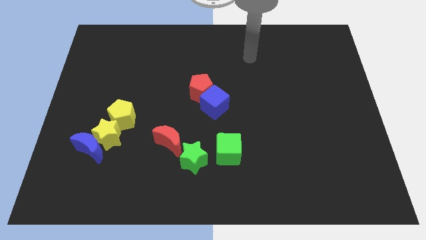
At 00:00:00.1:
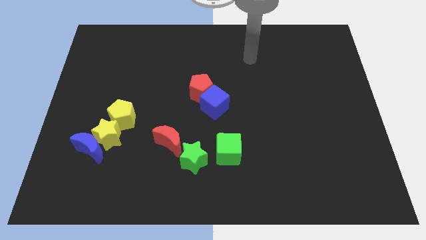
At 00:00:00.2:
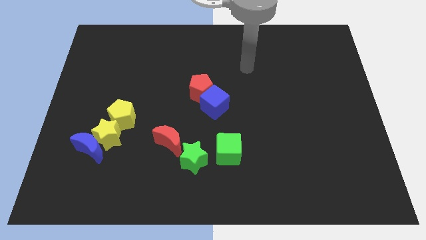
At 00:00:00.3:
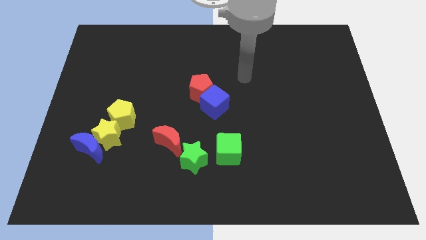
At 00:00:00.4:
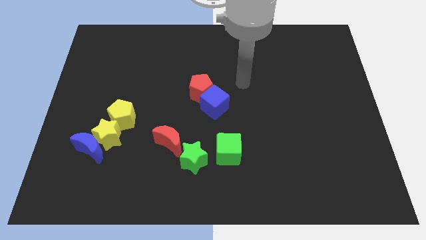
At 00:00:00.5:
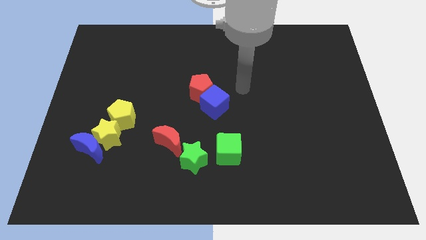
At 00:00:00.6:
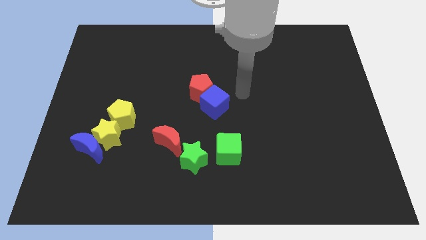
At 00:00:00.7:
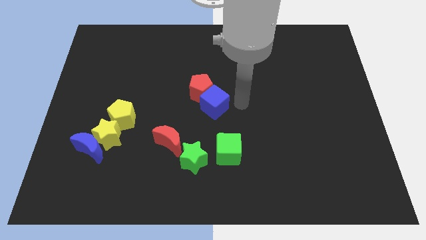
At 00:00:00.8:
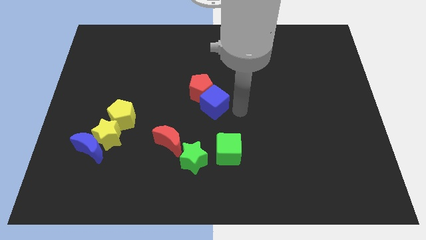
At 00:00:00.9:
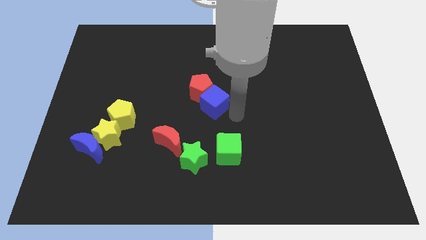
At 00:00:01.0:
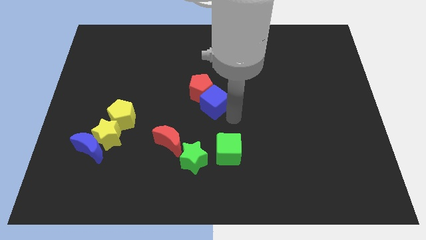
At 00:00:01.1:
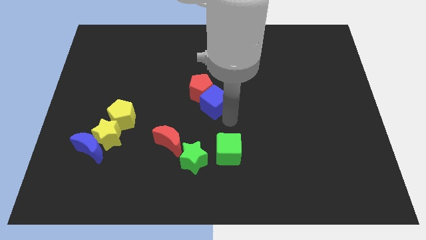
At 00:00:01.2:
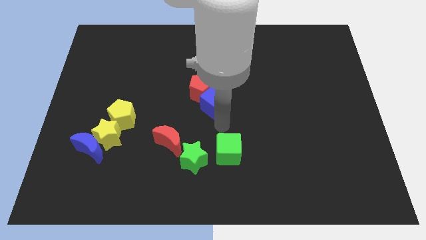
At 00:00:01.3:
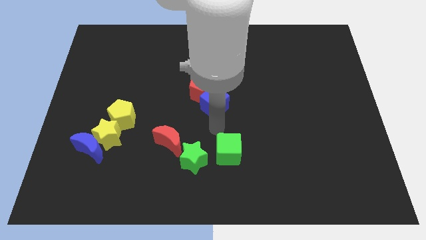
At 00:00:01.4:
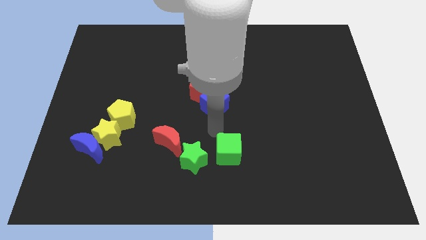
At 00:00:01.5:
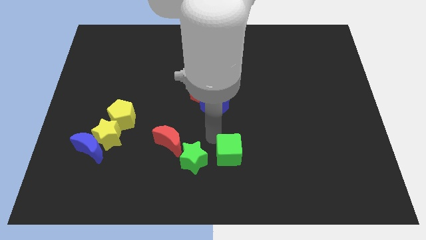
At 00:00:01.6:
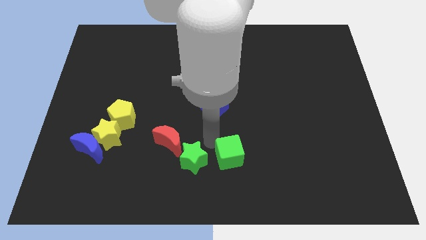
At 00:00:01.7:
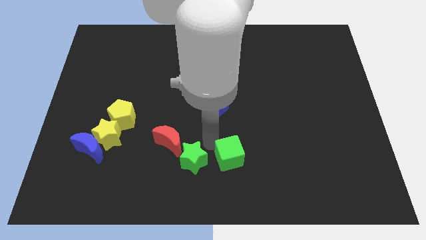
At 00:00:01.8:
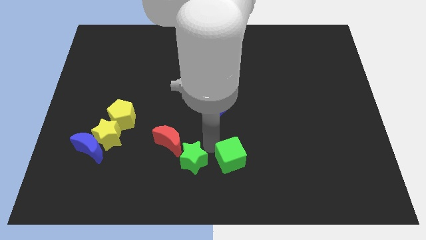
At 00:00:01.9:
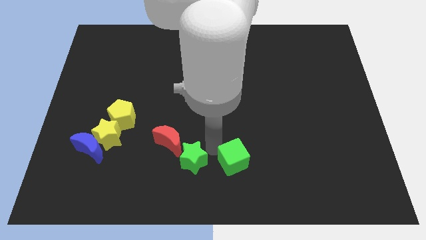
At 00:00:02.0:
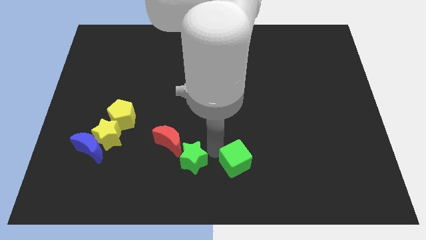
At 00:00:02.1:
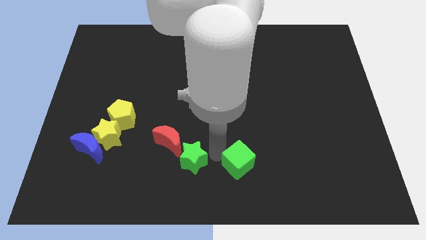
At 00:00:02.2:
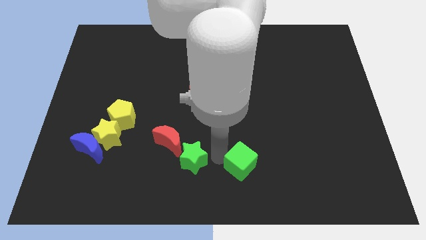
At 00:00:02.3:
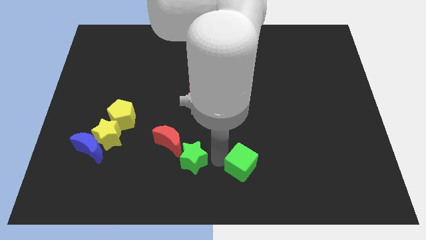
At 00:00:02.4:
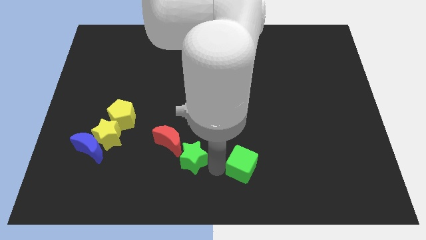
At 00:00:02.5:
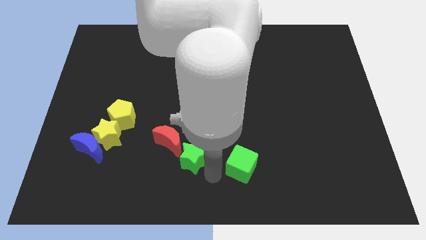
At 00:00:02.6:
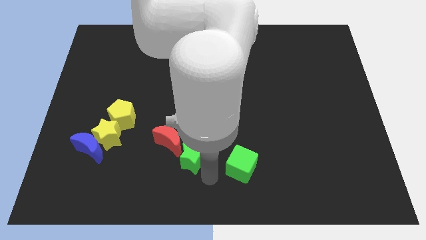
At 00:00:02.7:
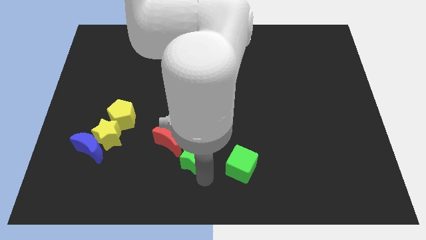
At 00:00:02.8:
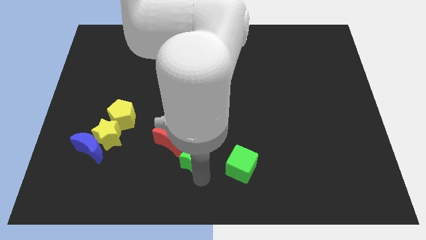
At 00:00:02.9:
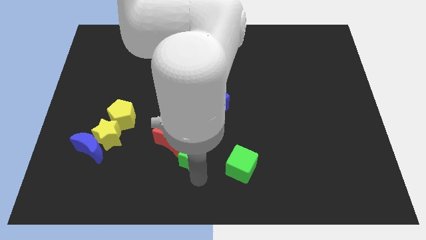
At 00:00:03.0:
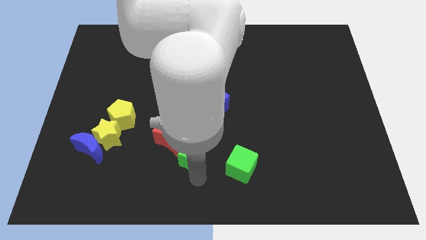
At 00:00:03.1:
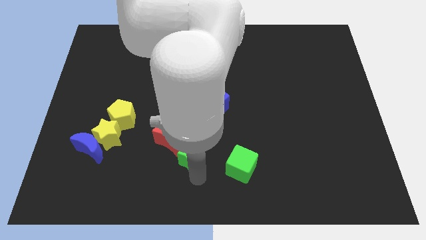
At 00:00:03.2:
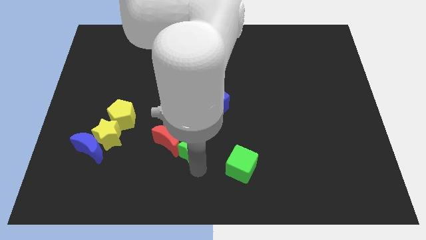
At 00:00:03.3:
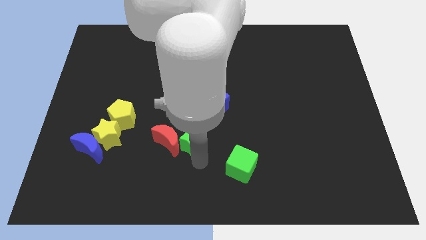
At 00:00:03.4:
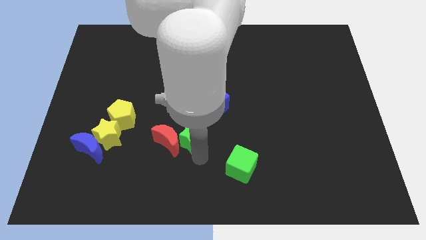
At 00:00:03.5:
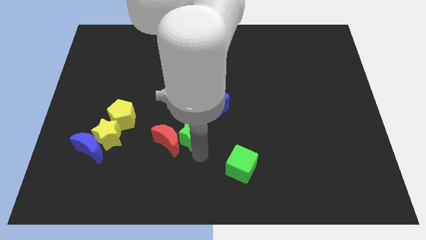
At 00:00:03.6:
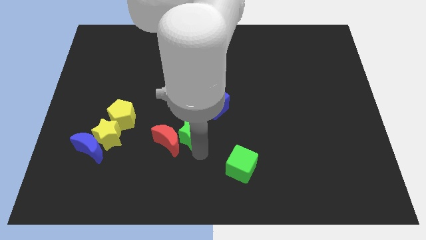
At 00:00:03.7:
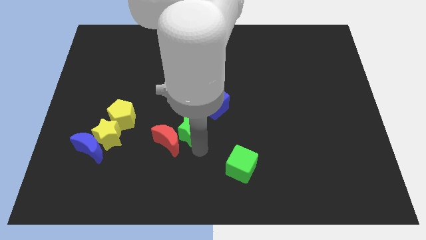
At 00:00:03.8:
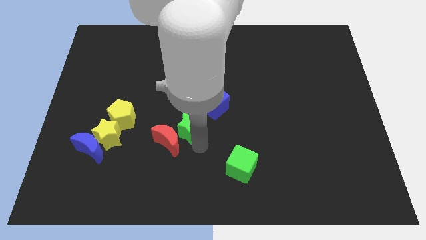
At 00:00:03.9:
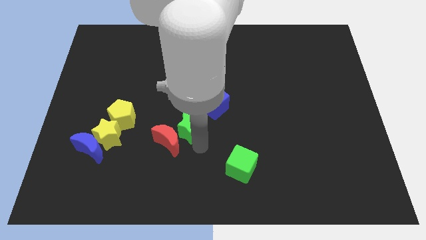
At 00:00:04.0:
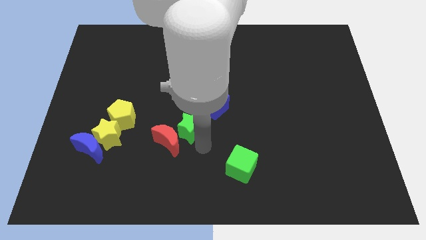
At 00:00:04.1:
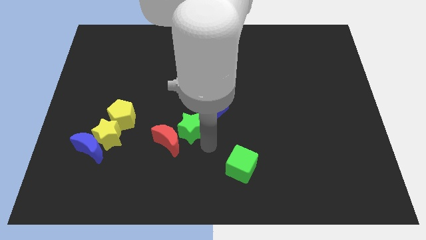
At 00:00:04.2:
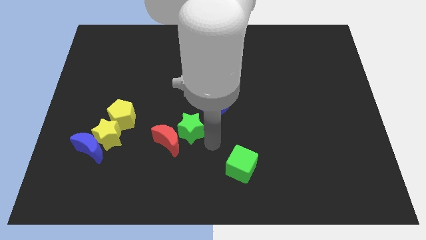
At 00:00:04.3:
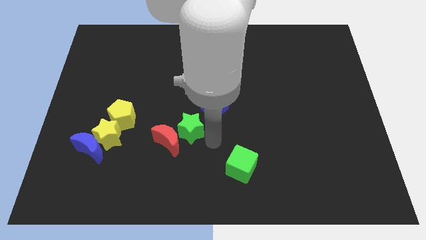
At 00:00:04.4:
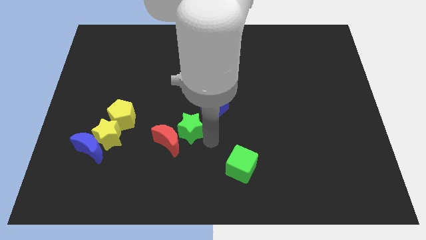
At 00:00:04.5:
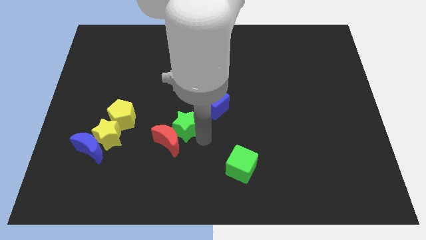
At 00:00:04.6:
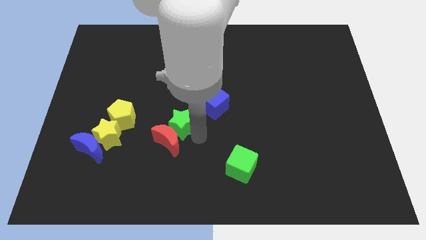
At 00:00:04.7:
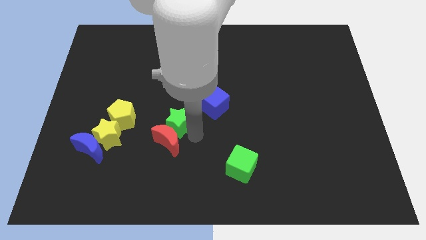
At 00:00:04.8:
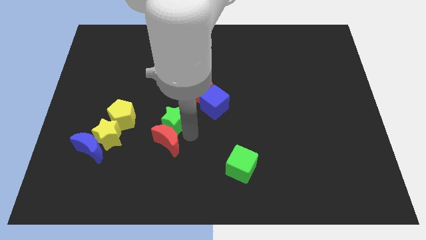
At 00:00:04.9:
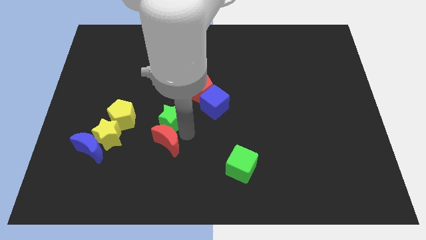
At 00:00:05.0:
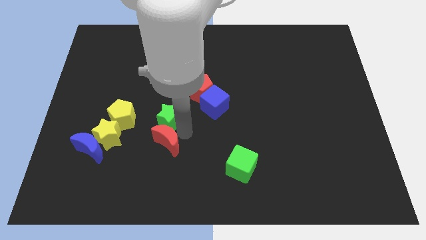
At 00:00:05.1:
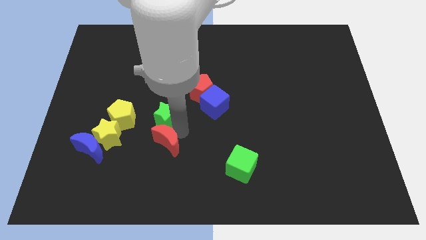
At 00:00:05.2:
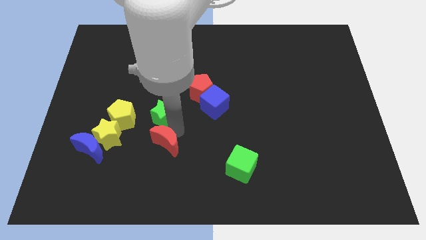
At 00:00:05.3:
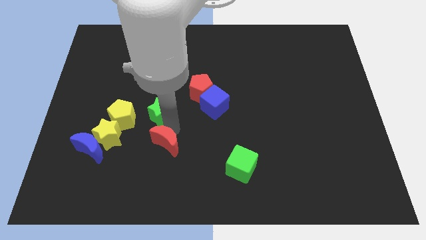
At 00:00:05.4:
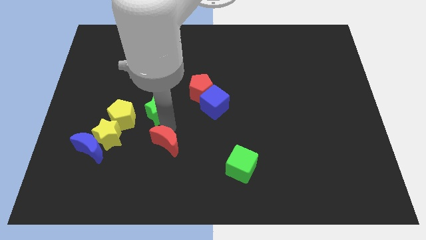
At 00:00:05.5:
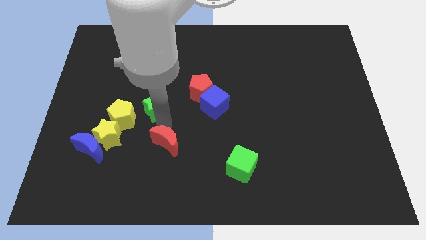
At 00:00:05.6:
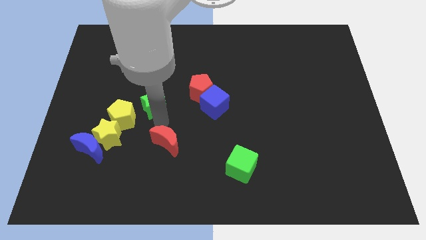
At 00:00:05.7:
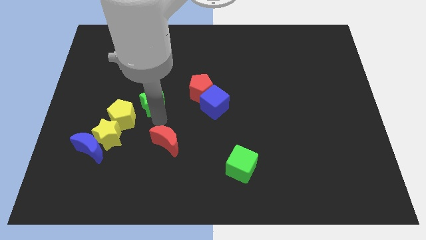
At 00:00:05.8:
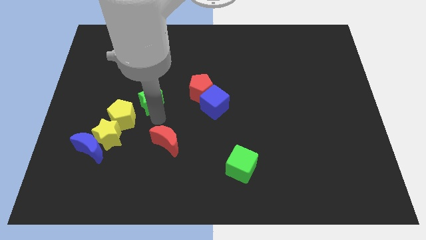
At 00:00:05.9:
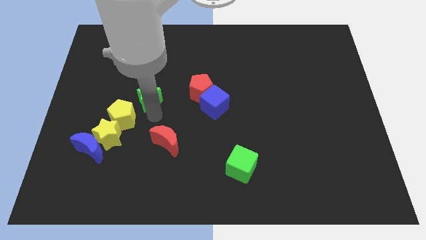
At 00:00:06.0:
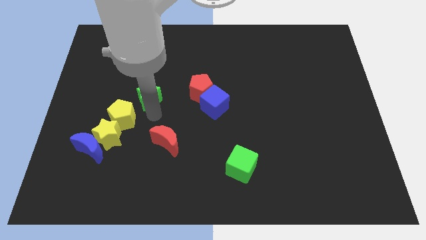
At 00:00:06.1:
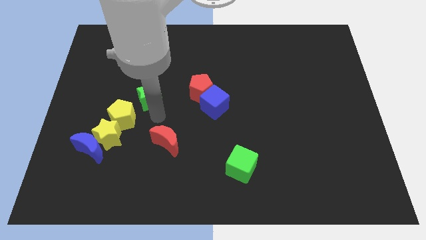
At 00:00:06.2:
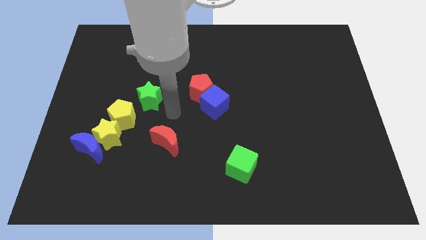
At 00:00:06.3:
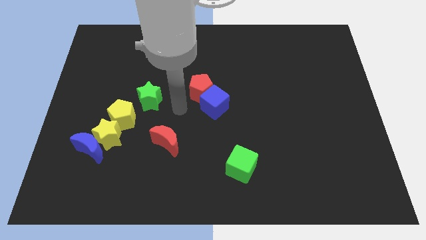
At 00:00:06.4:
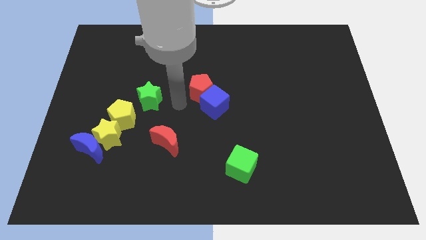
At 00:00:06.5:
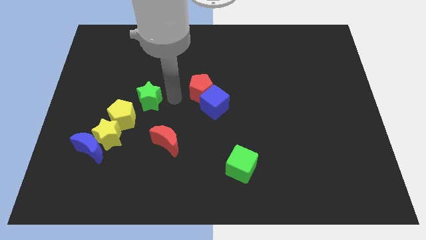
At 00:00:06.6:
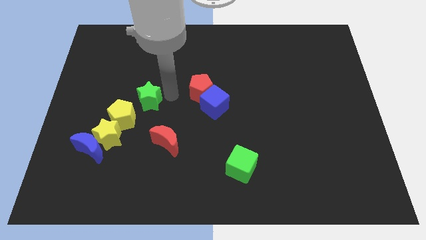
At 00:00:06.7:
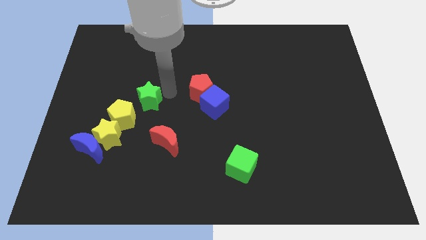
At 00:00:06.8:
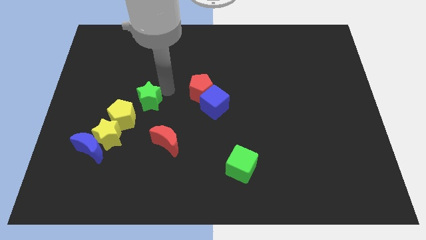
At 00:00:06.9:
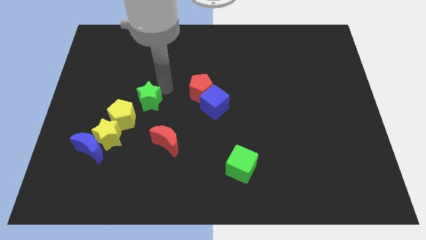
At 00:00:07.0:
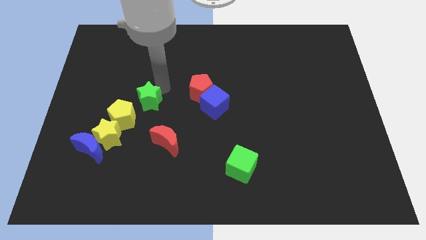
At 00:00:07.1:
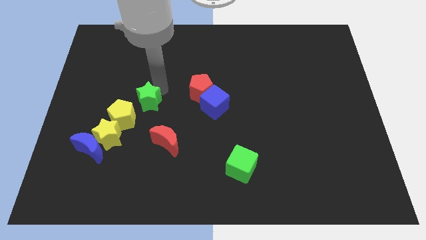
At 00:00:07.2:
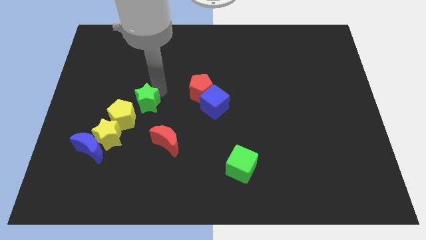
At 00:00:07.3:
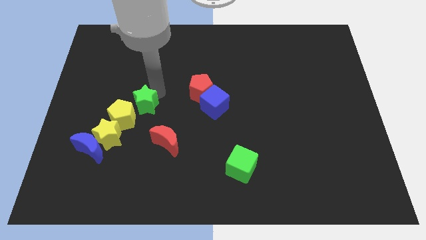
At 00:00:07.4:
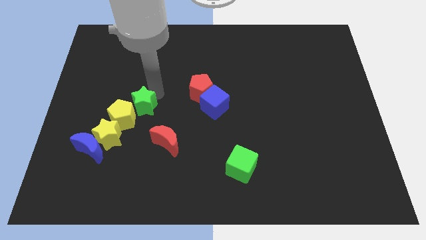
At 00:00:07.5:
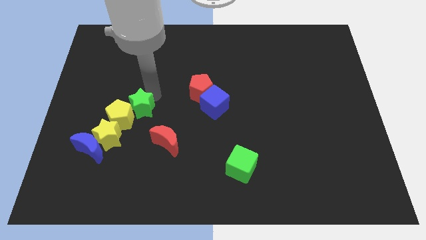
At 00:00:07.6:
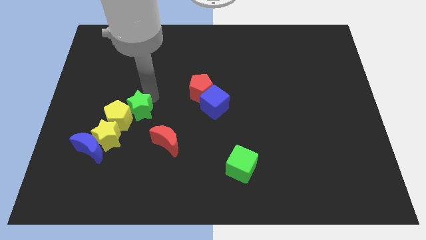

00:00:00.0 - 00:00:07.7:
push the green star to the yellow pentagon

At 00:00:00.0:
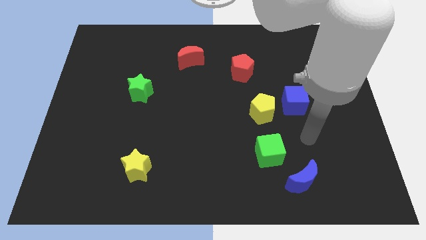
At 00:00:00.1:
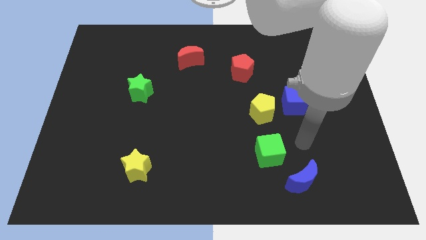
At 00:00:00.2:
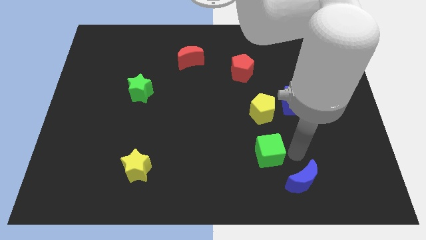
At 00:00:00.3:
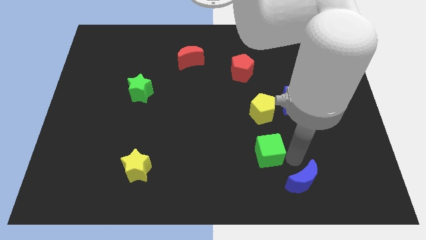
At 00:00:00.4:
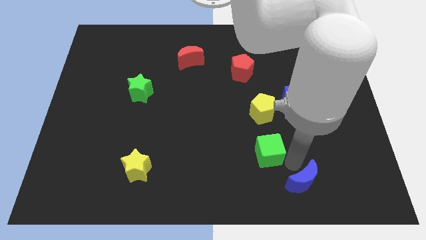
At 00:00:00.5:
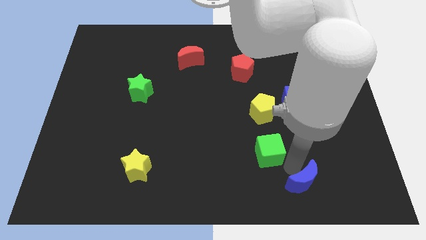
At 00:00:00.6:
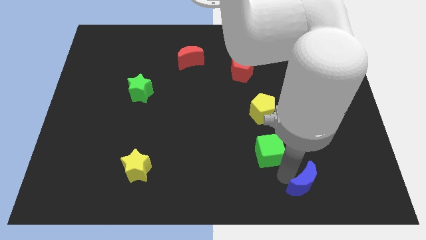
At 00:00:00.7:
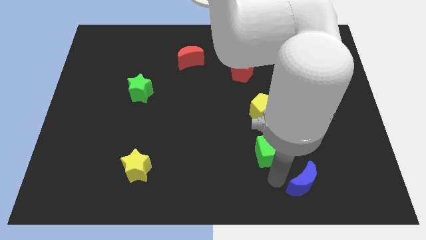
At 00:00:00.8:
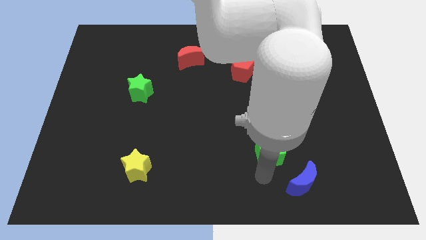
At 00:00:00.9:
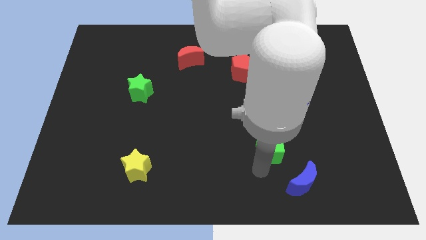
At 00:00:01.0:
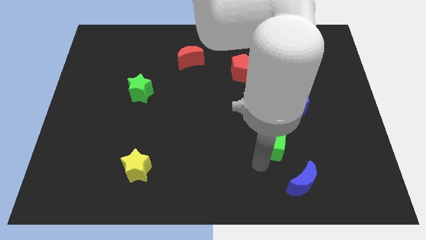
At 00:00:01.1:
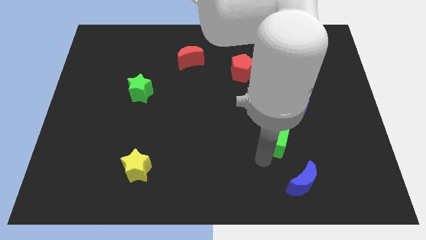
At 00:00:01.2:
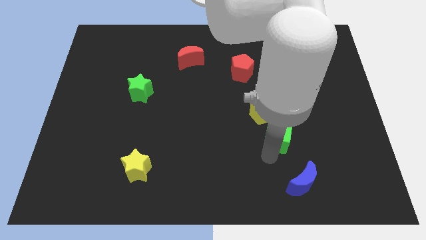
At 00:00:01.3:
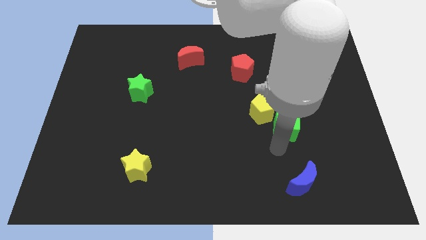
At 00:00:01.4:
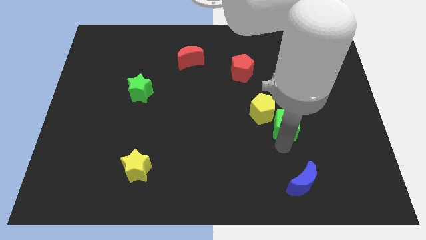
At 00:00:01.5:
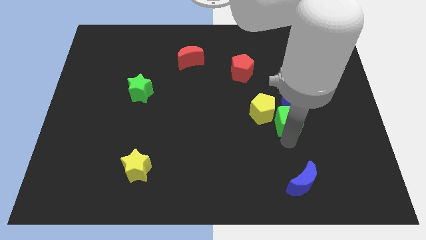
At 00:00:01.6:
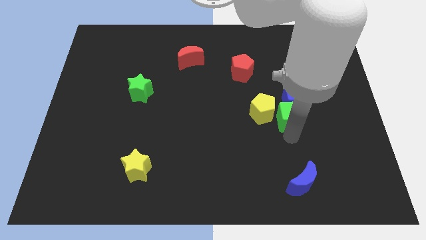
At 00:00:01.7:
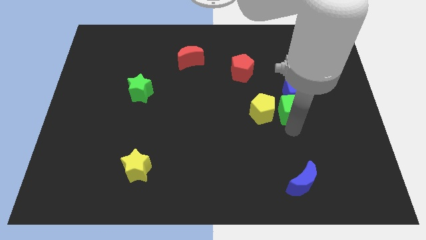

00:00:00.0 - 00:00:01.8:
put the green cube to the blue cube
